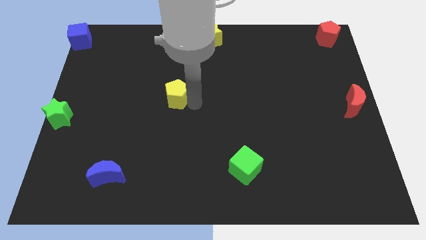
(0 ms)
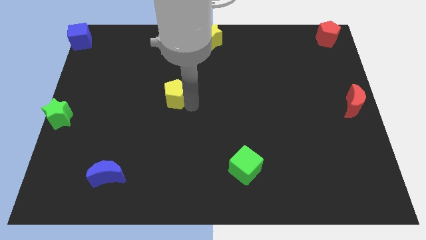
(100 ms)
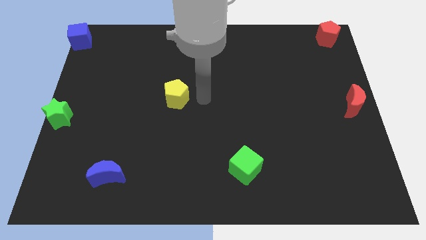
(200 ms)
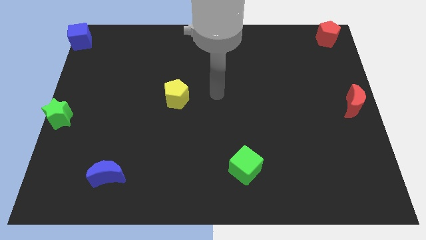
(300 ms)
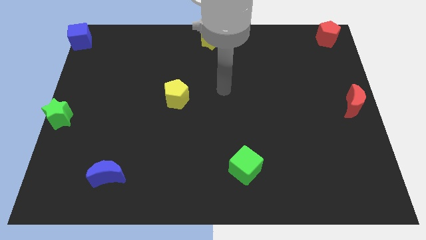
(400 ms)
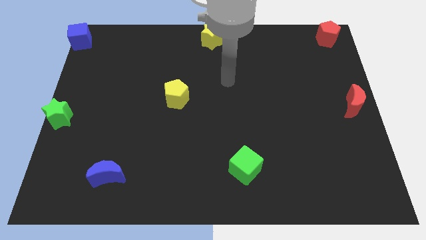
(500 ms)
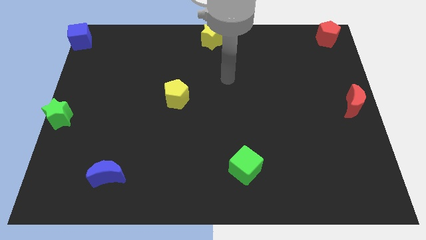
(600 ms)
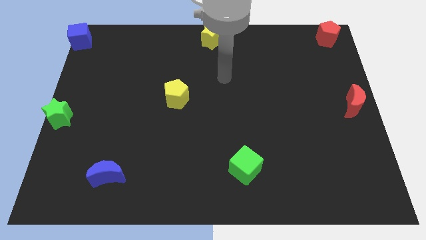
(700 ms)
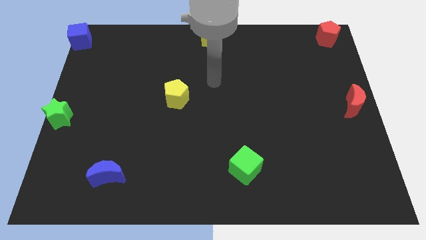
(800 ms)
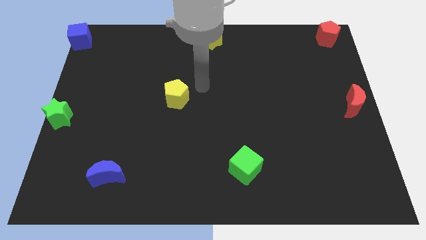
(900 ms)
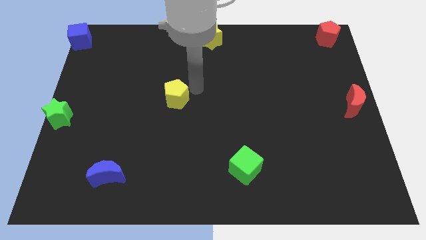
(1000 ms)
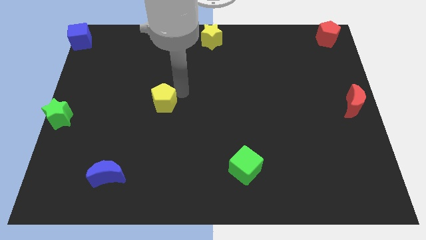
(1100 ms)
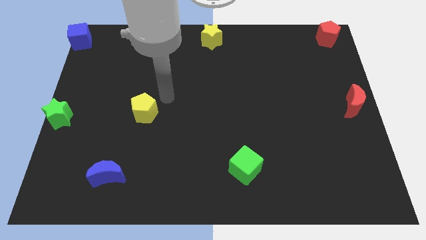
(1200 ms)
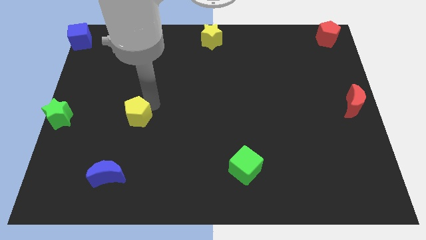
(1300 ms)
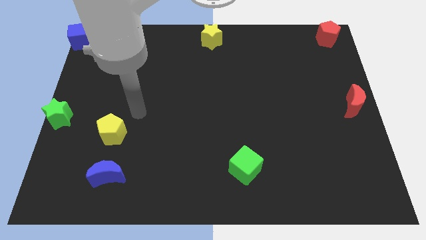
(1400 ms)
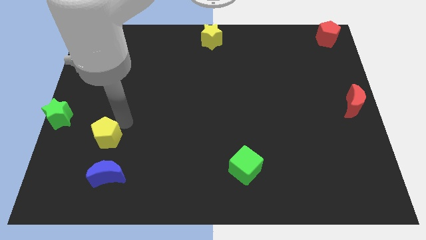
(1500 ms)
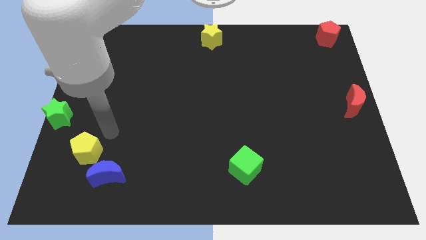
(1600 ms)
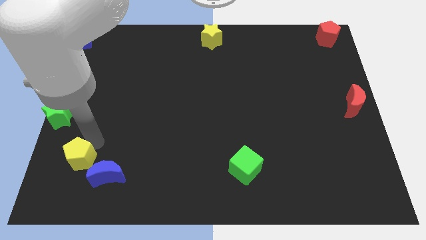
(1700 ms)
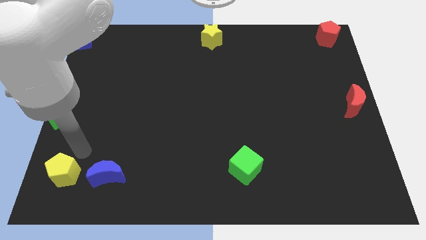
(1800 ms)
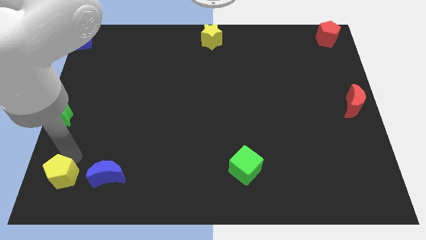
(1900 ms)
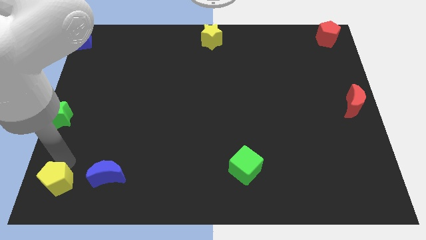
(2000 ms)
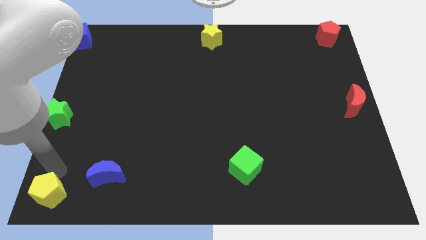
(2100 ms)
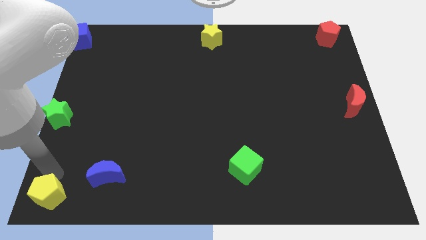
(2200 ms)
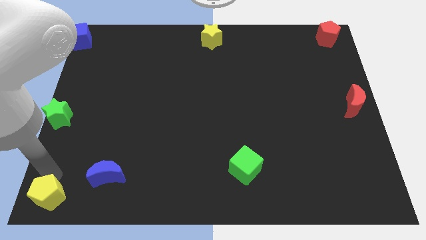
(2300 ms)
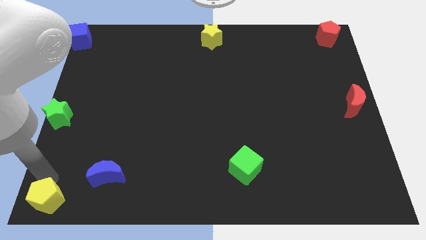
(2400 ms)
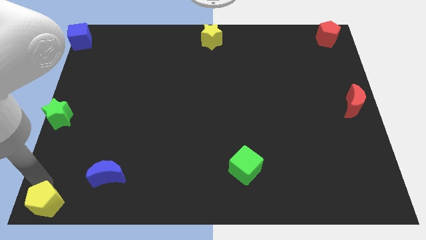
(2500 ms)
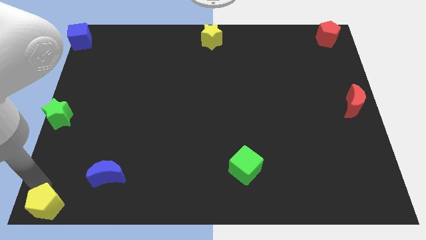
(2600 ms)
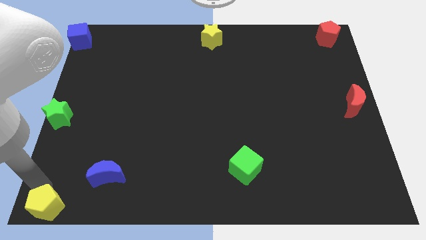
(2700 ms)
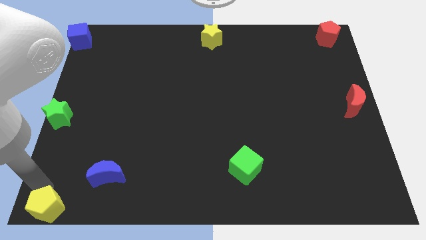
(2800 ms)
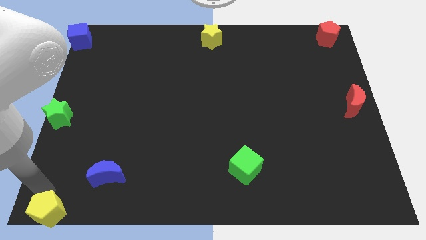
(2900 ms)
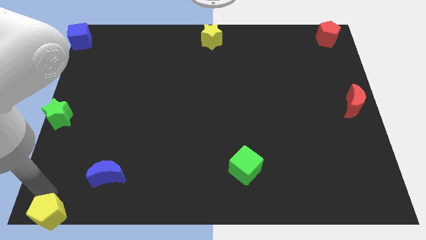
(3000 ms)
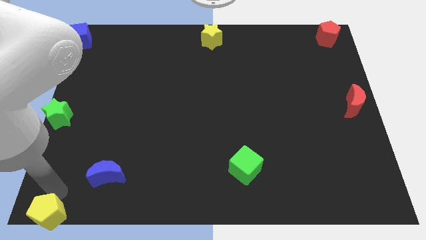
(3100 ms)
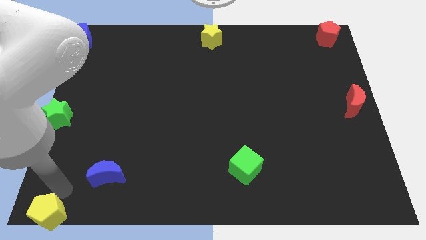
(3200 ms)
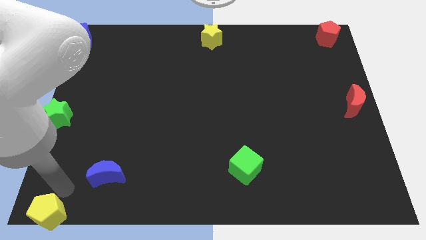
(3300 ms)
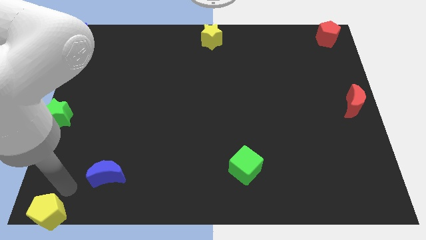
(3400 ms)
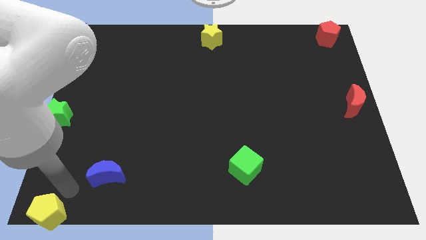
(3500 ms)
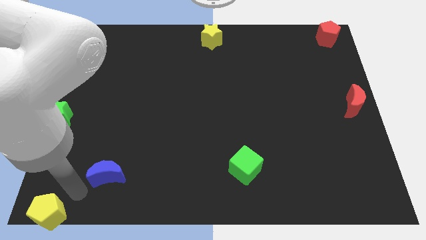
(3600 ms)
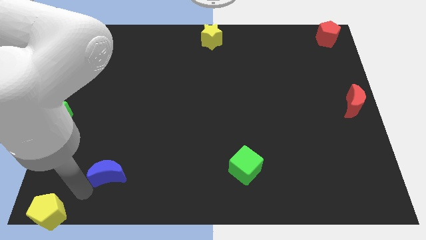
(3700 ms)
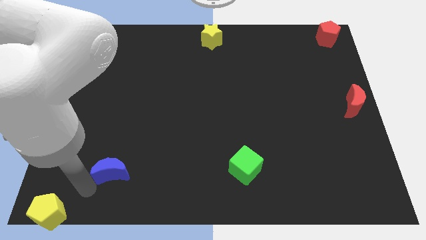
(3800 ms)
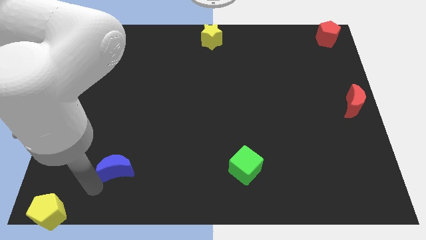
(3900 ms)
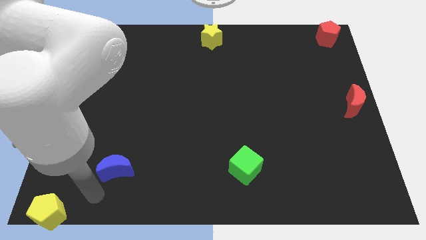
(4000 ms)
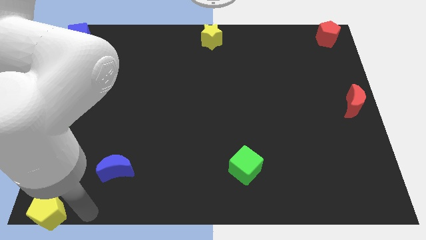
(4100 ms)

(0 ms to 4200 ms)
move yellow pentagon to the bottom left of the board

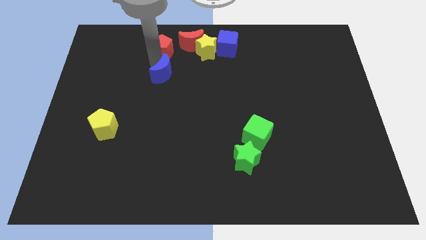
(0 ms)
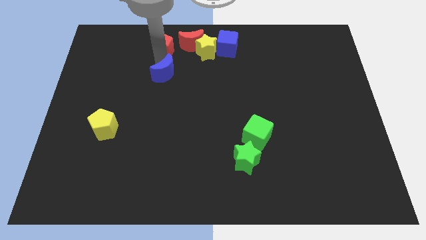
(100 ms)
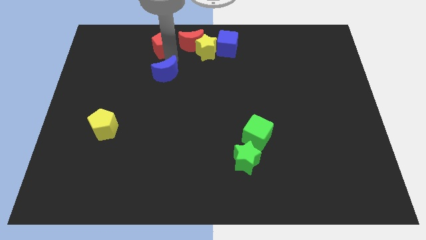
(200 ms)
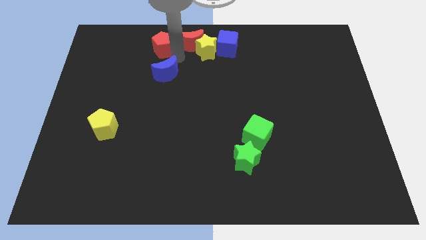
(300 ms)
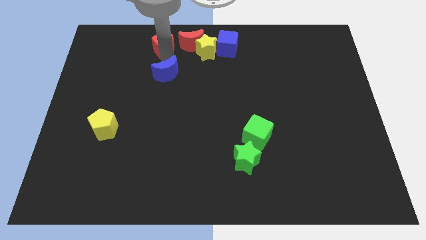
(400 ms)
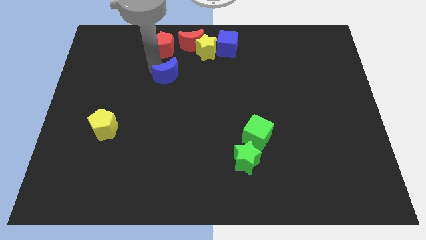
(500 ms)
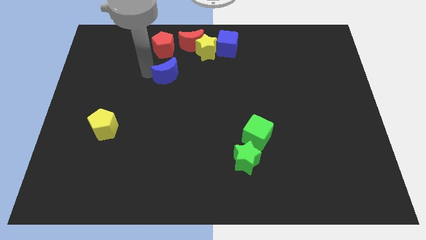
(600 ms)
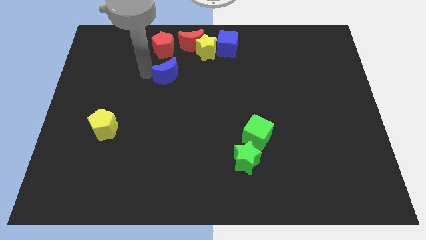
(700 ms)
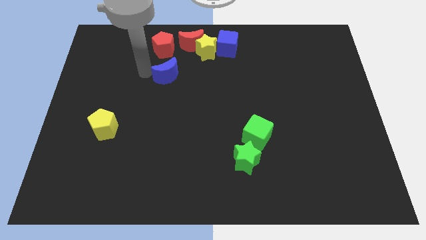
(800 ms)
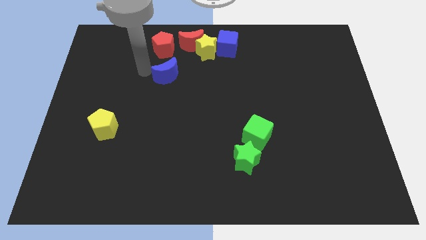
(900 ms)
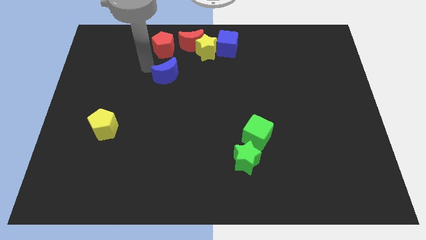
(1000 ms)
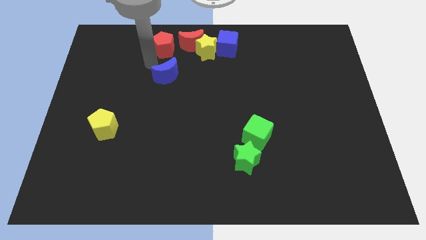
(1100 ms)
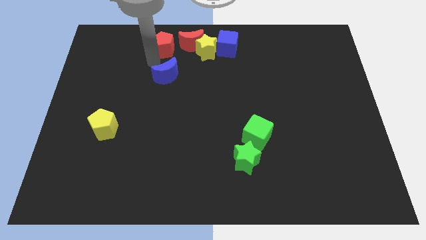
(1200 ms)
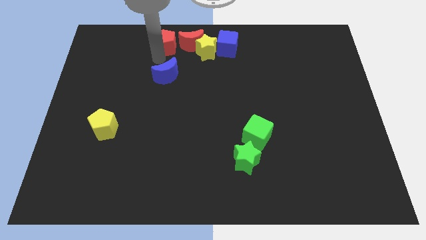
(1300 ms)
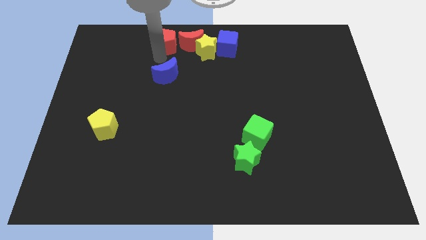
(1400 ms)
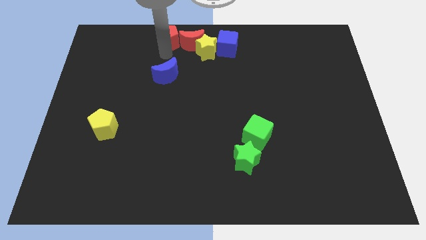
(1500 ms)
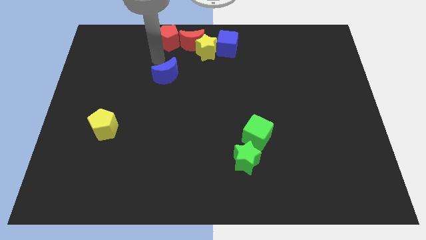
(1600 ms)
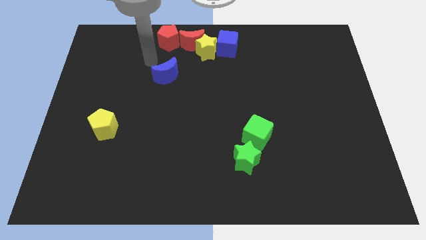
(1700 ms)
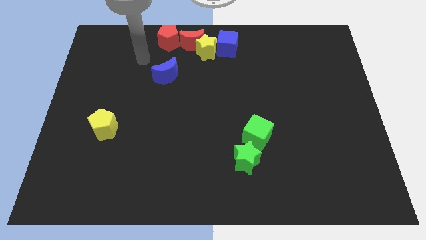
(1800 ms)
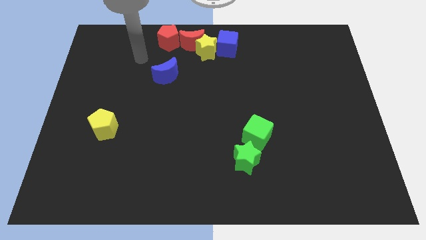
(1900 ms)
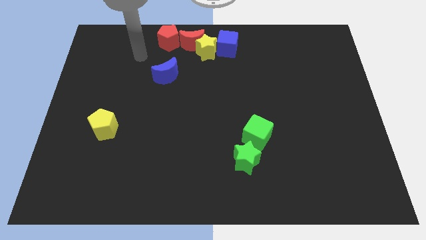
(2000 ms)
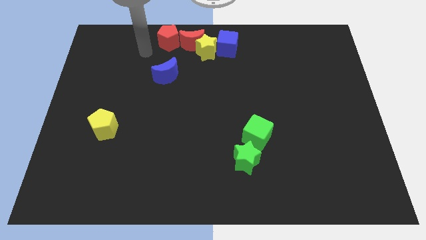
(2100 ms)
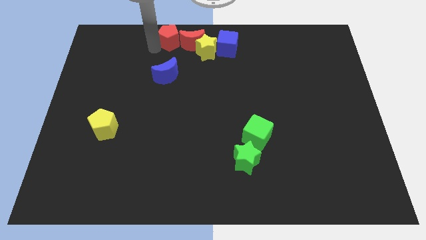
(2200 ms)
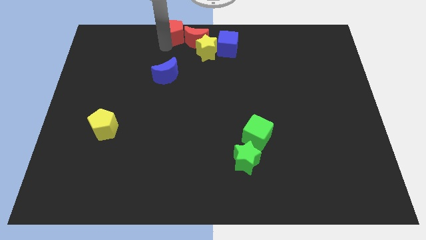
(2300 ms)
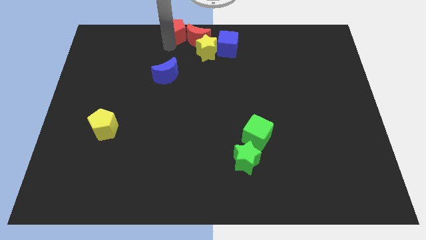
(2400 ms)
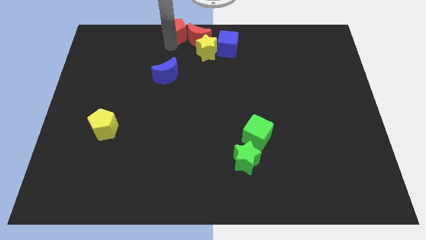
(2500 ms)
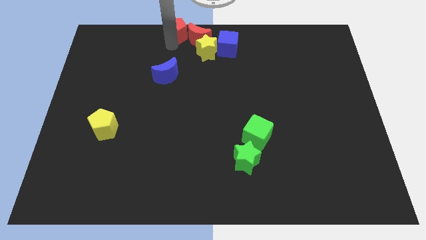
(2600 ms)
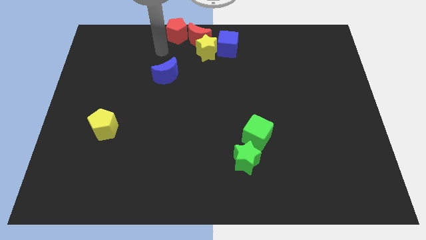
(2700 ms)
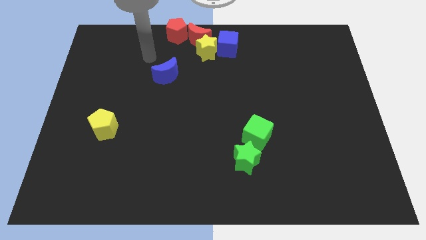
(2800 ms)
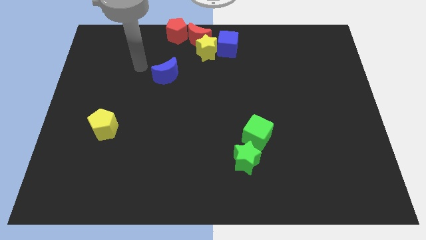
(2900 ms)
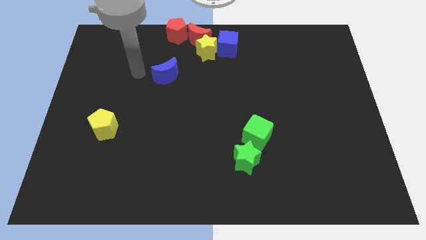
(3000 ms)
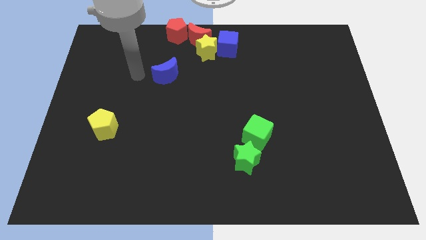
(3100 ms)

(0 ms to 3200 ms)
move the red pentagon to the top side of the red crescent

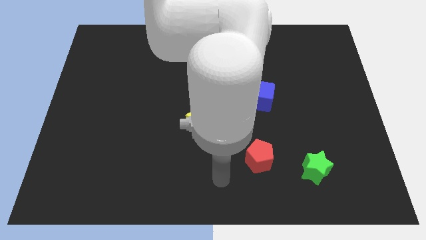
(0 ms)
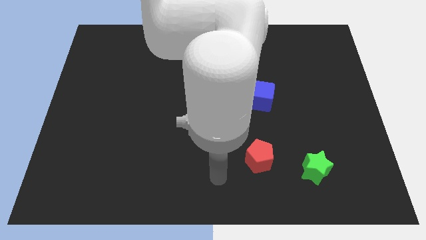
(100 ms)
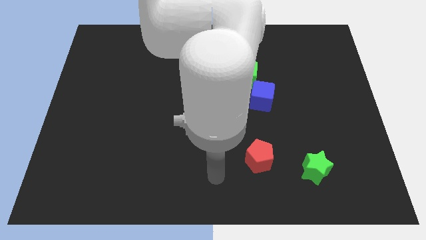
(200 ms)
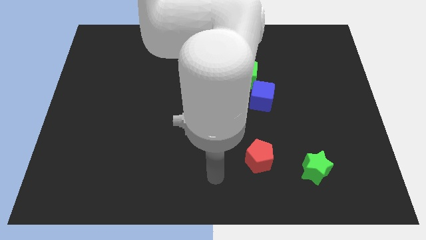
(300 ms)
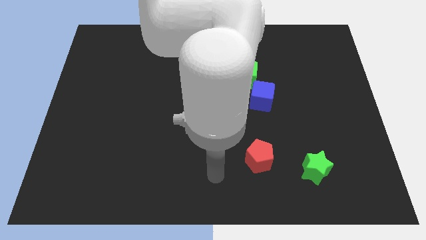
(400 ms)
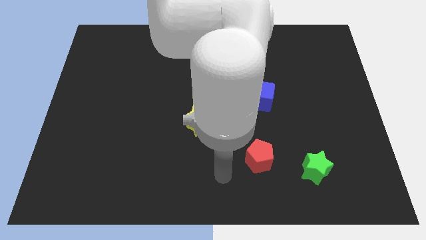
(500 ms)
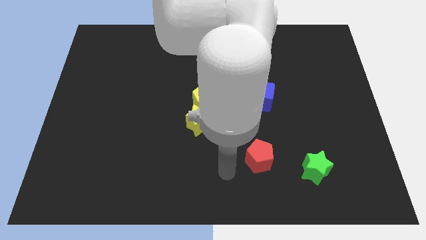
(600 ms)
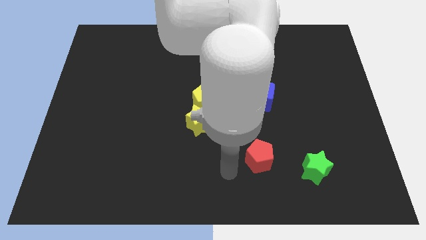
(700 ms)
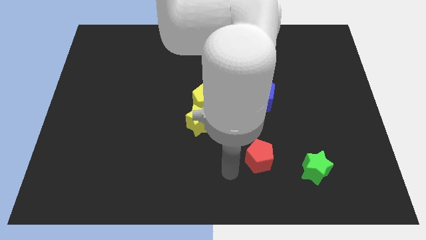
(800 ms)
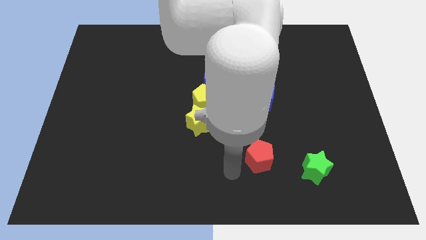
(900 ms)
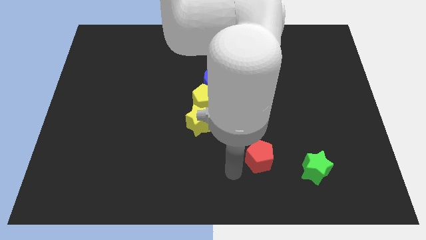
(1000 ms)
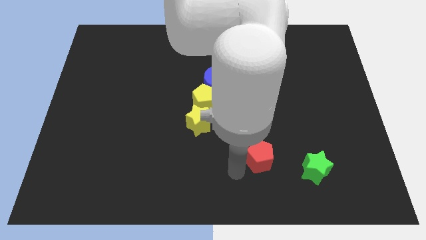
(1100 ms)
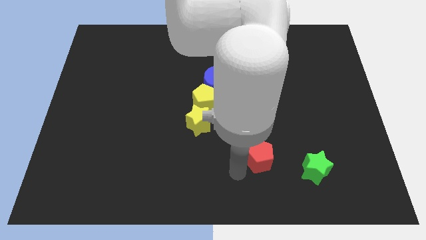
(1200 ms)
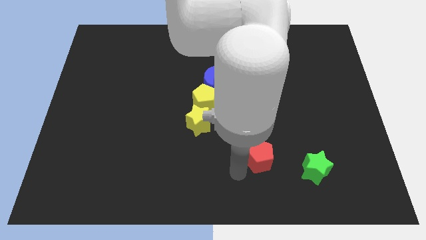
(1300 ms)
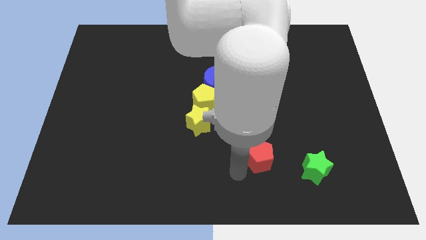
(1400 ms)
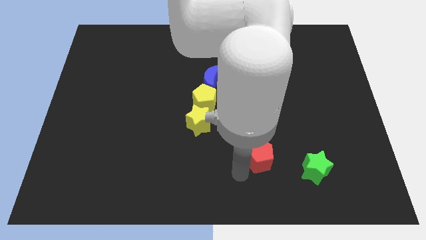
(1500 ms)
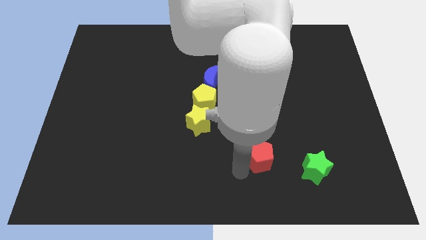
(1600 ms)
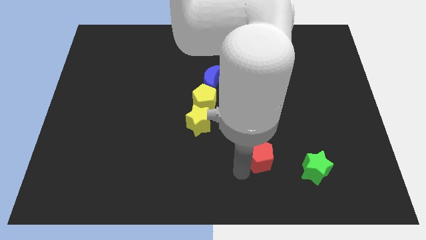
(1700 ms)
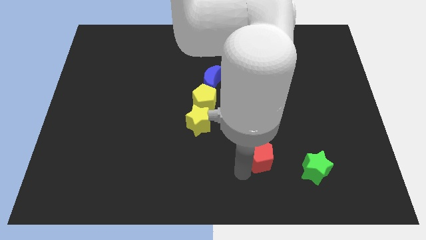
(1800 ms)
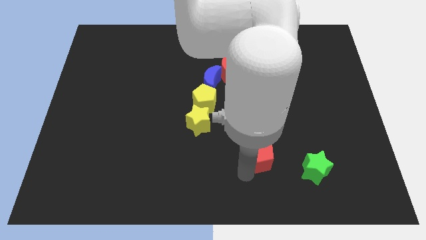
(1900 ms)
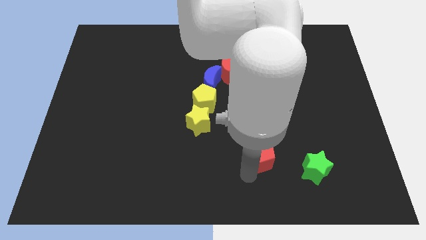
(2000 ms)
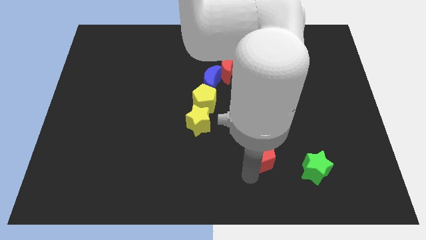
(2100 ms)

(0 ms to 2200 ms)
place the arm down to the red pentagon
